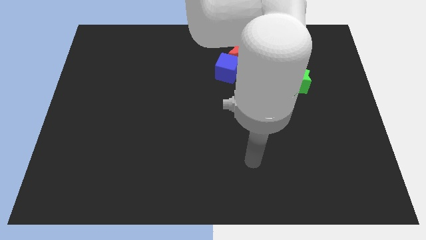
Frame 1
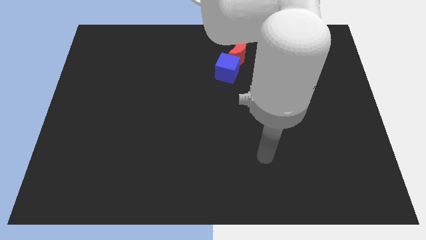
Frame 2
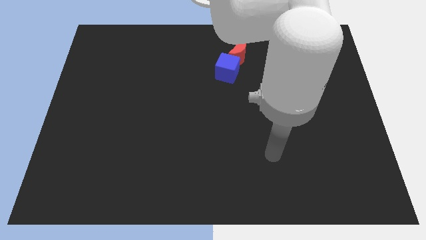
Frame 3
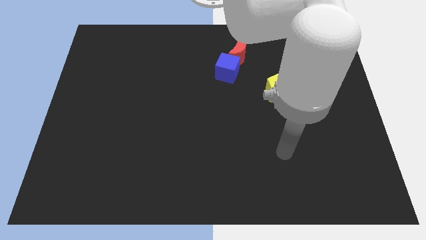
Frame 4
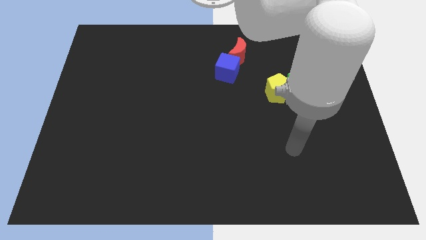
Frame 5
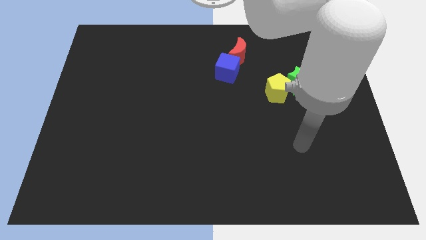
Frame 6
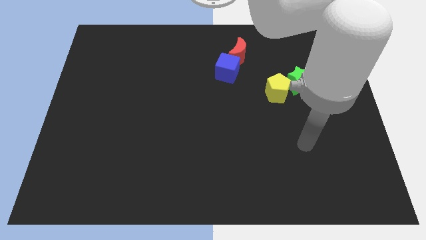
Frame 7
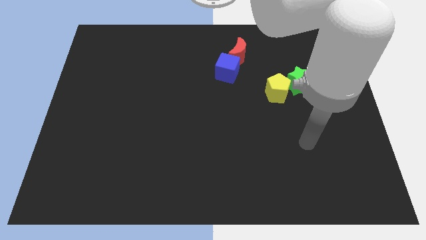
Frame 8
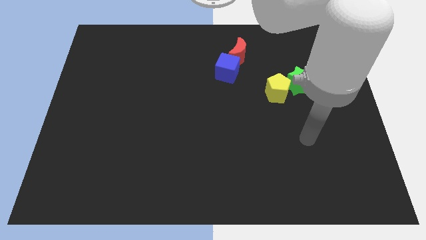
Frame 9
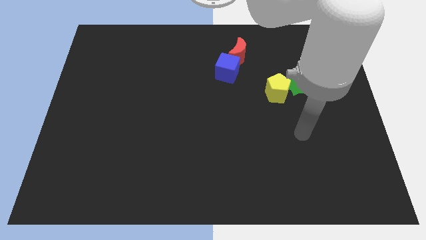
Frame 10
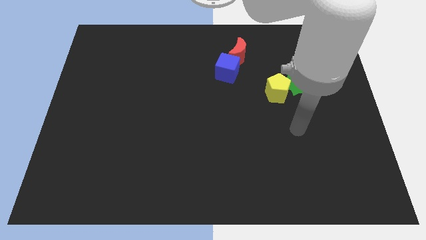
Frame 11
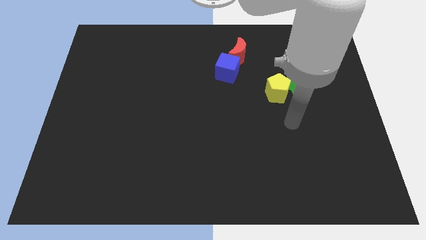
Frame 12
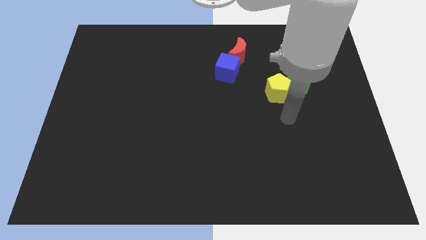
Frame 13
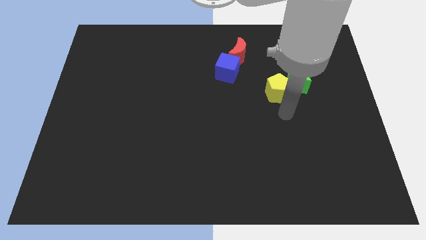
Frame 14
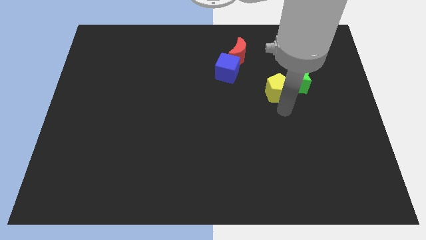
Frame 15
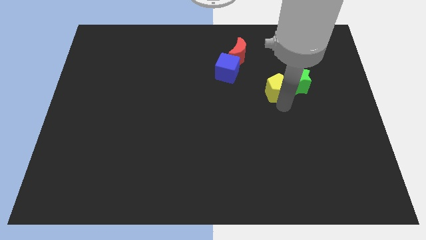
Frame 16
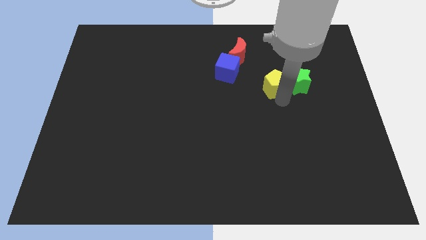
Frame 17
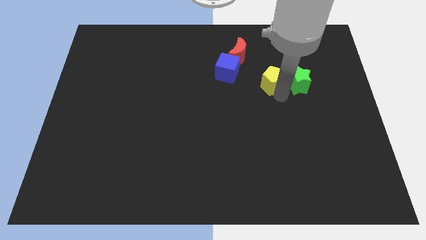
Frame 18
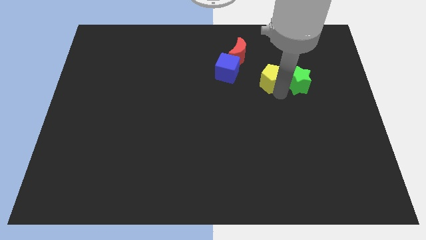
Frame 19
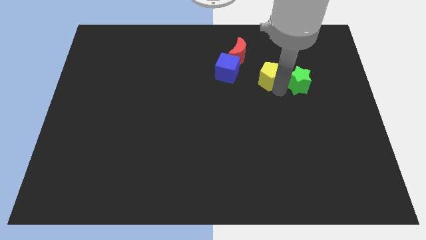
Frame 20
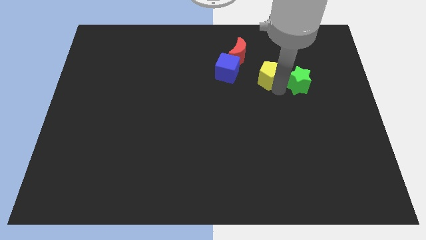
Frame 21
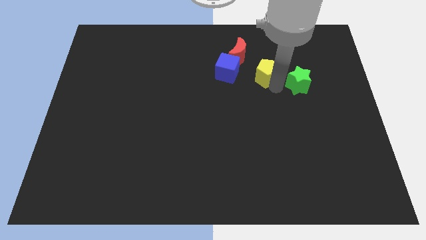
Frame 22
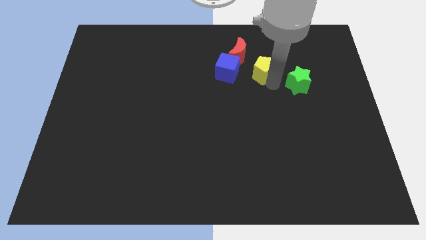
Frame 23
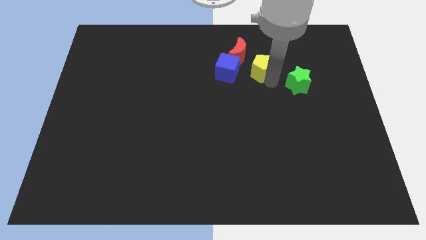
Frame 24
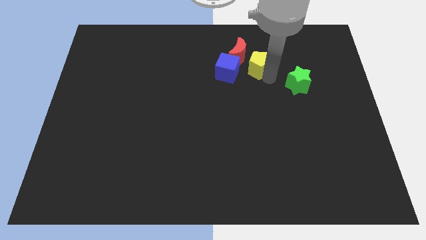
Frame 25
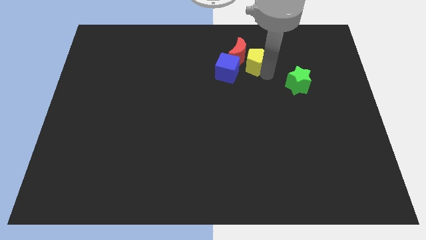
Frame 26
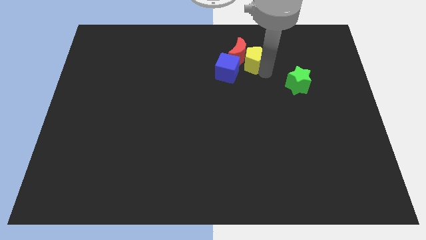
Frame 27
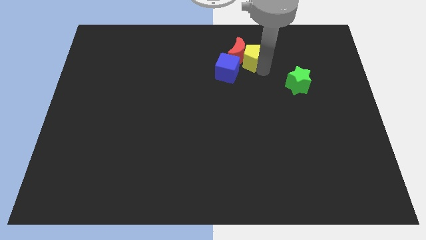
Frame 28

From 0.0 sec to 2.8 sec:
move the yellow block next to the moon

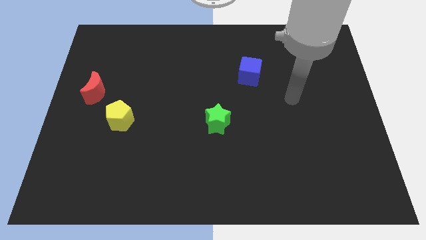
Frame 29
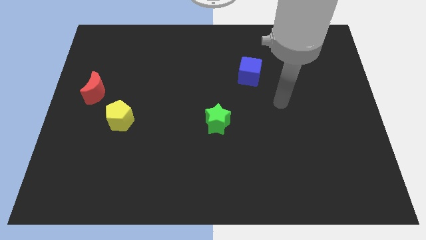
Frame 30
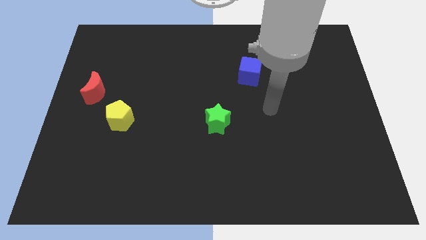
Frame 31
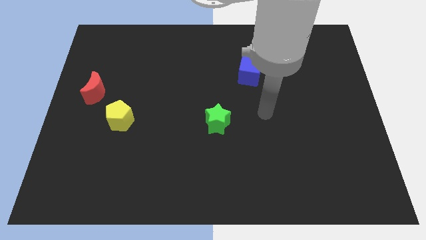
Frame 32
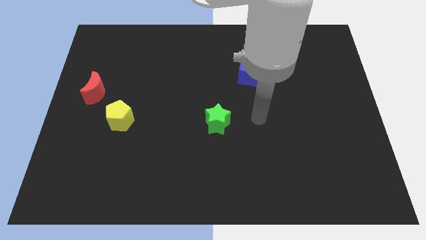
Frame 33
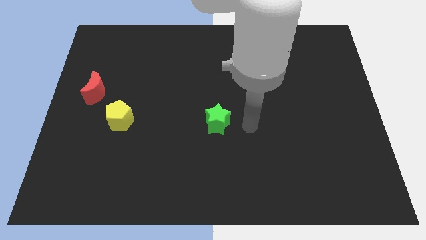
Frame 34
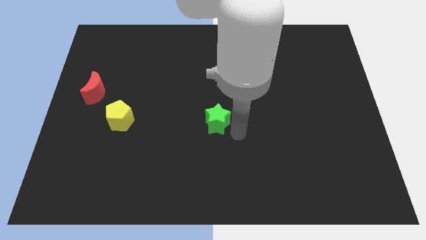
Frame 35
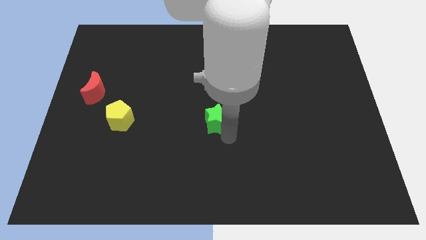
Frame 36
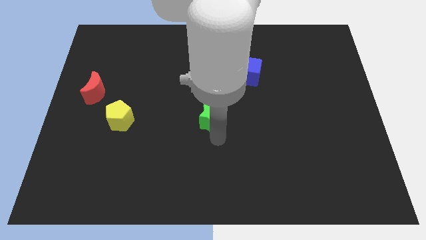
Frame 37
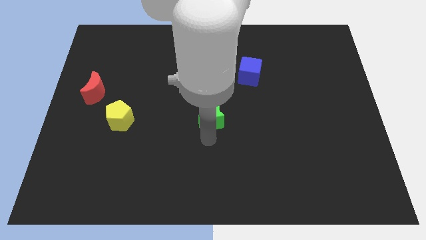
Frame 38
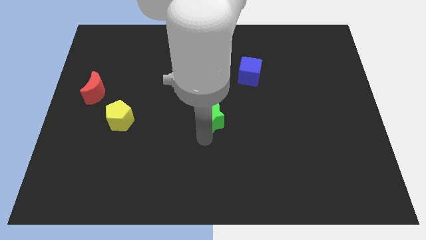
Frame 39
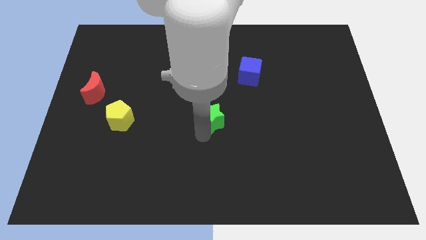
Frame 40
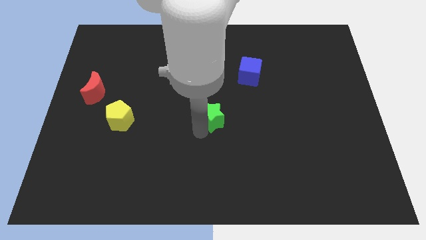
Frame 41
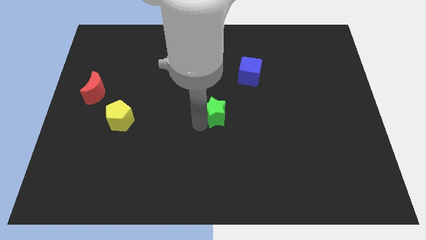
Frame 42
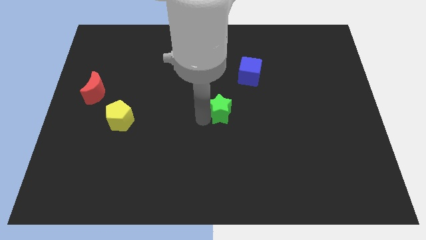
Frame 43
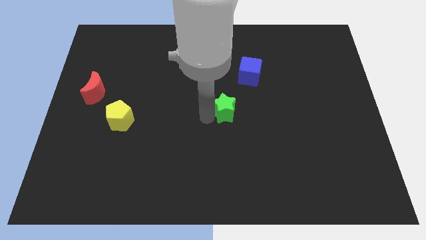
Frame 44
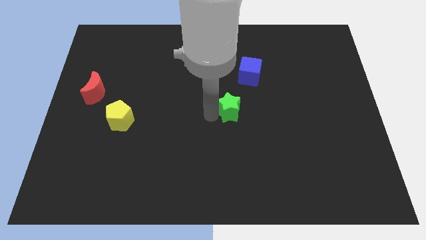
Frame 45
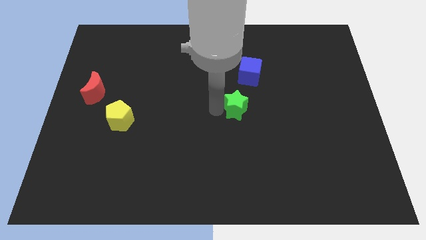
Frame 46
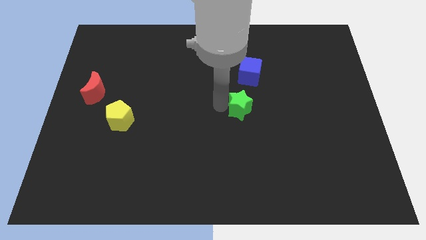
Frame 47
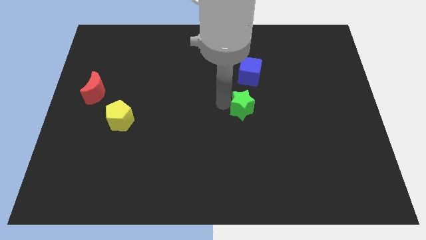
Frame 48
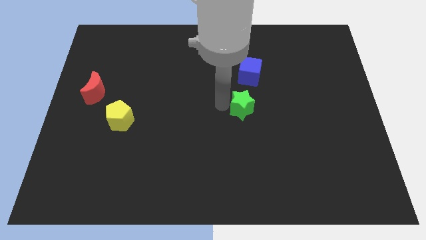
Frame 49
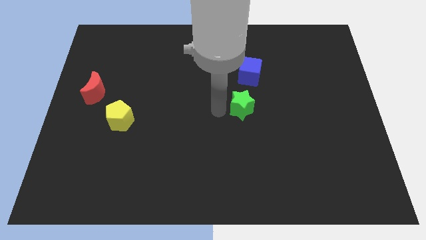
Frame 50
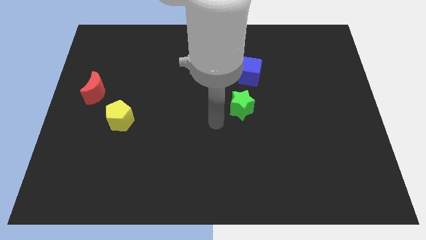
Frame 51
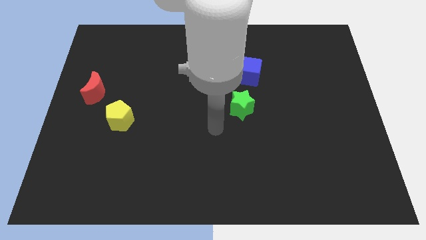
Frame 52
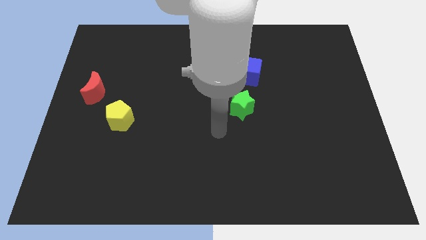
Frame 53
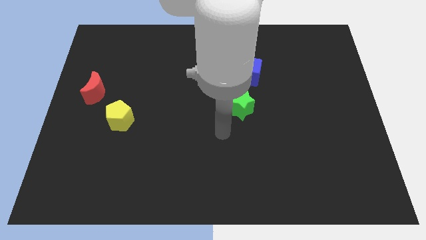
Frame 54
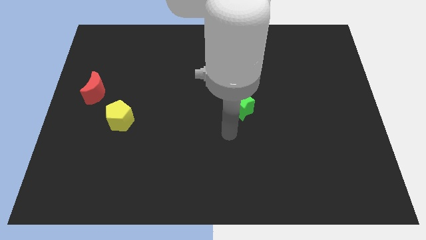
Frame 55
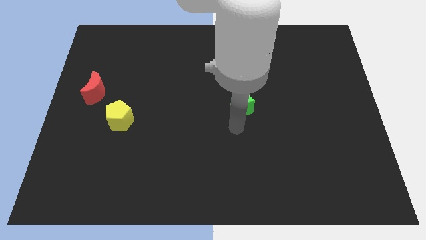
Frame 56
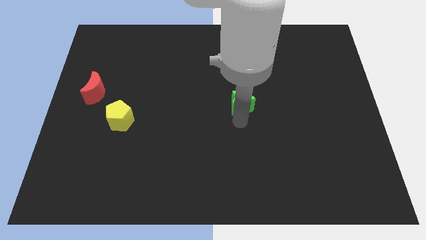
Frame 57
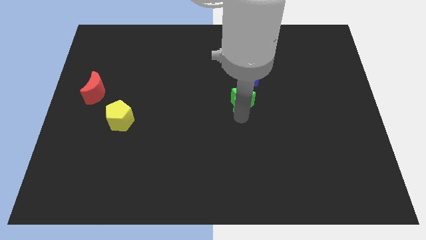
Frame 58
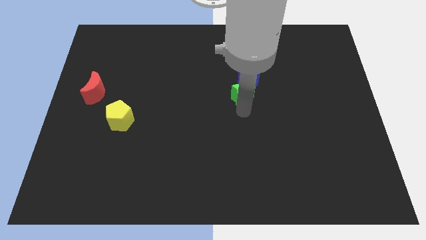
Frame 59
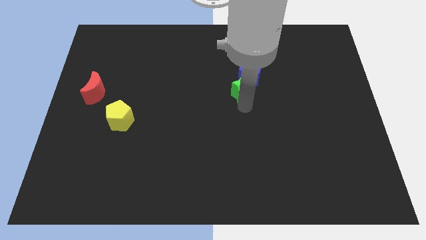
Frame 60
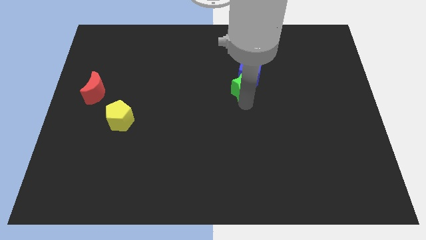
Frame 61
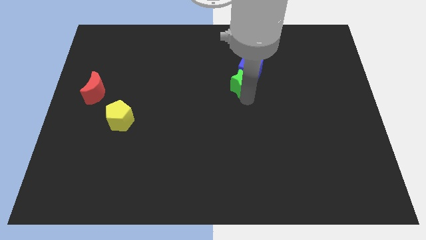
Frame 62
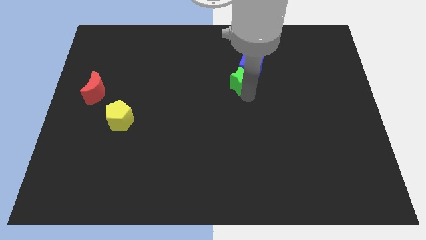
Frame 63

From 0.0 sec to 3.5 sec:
slide the green block close to the cube

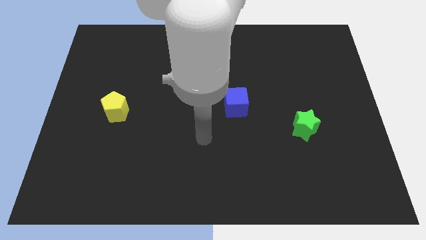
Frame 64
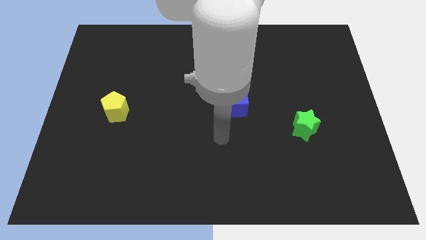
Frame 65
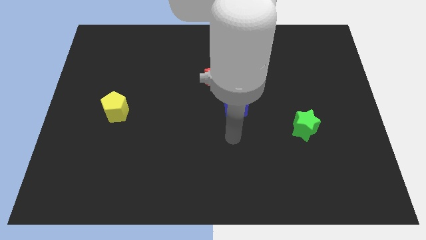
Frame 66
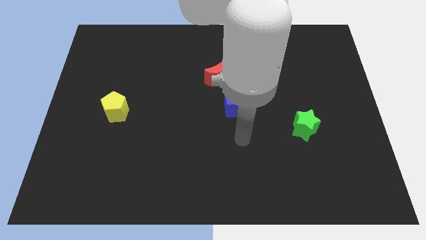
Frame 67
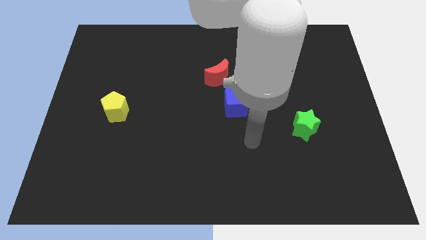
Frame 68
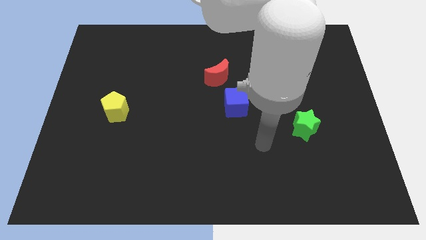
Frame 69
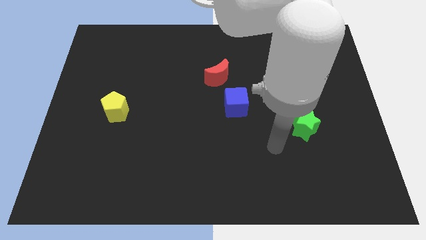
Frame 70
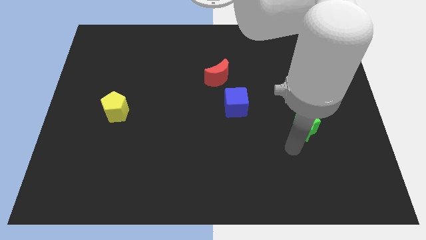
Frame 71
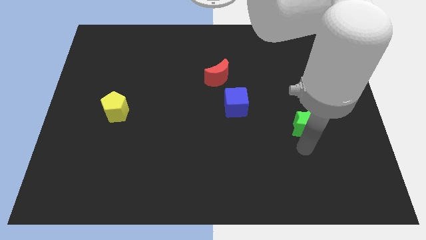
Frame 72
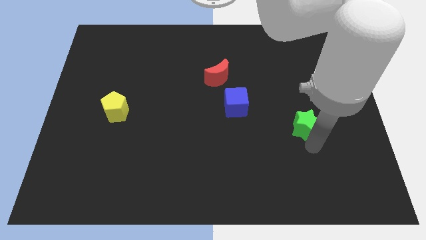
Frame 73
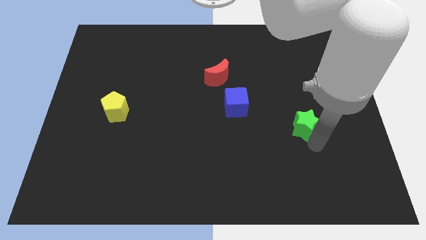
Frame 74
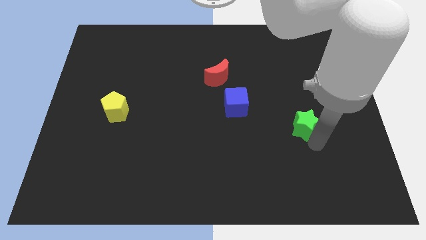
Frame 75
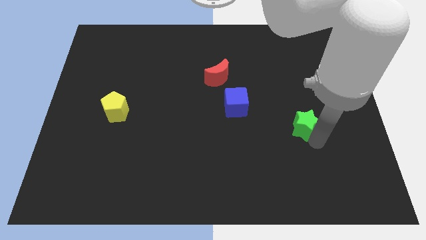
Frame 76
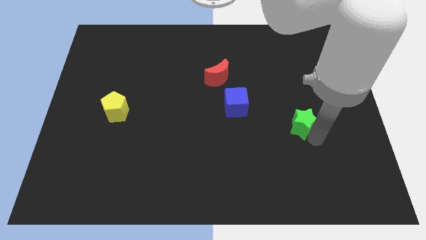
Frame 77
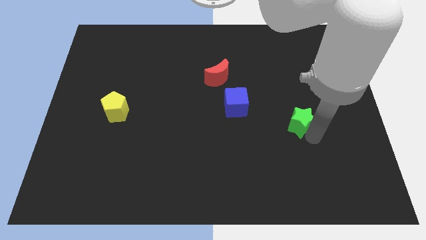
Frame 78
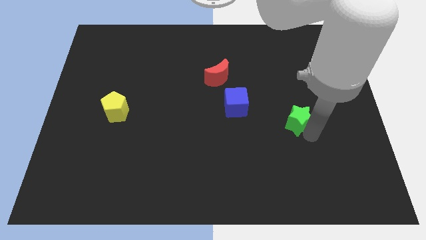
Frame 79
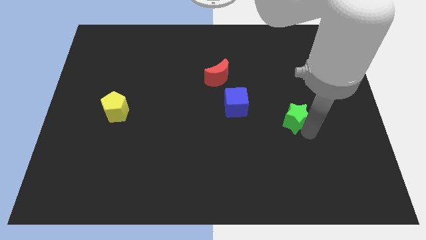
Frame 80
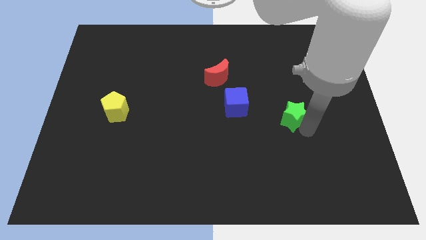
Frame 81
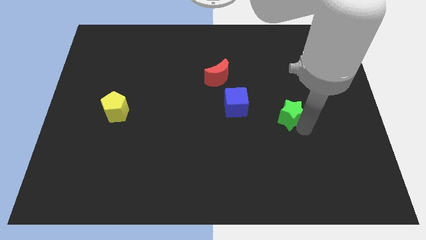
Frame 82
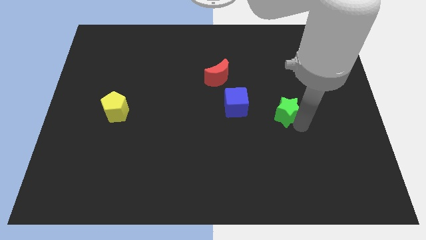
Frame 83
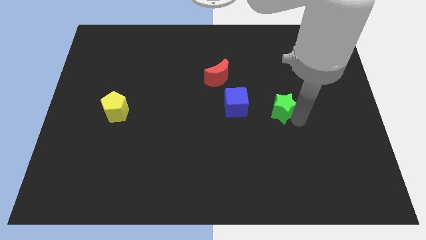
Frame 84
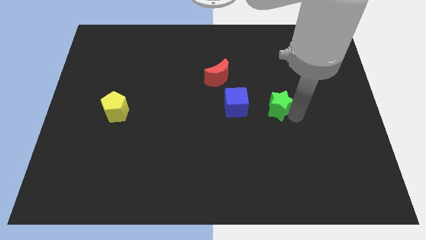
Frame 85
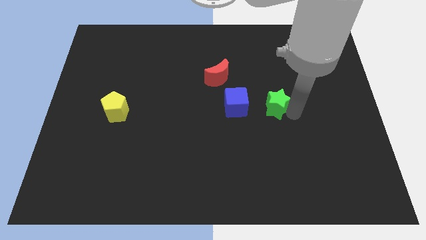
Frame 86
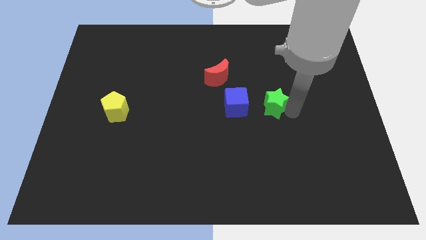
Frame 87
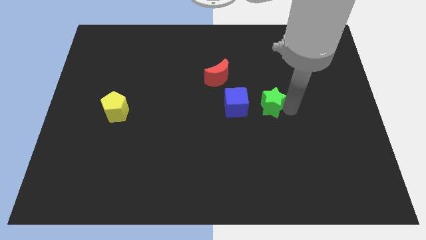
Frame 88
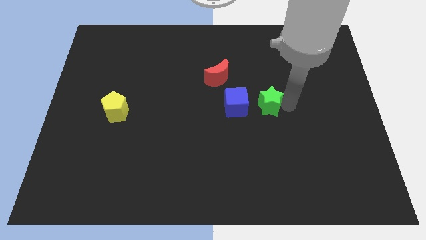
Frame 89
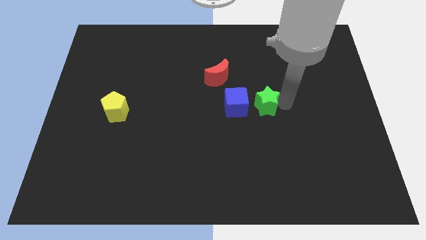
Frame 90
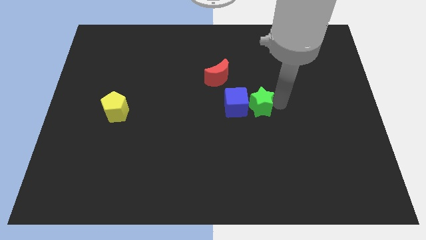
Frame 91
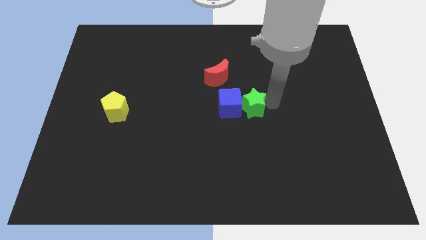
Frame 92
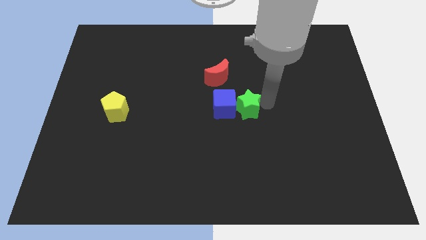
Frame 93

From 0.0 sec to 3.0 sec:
slide the green star close to the blue block
